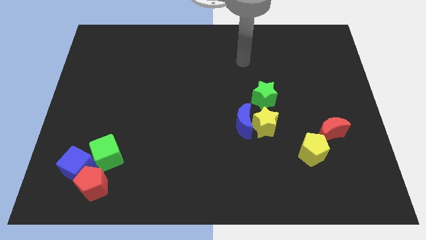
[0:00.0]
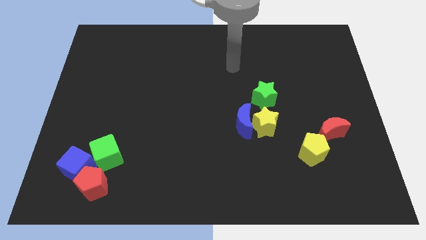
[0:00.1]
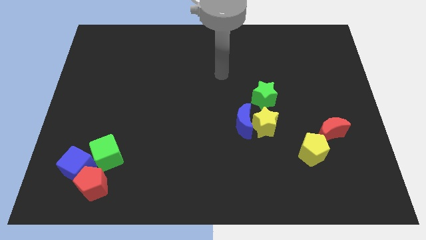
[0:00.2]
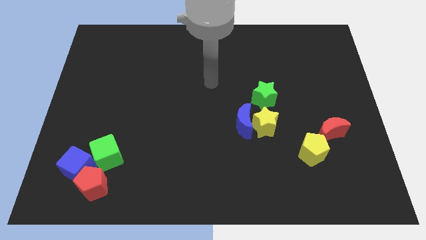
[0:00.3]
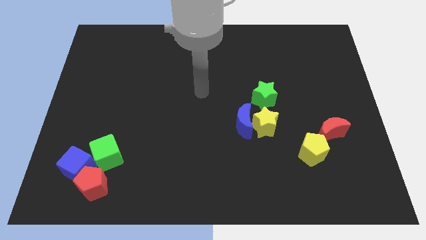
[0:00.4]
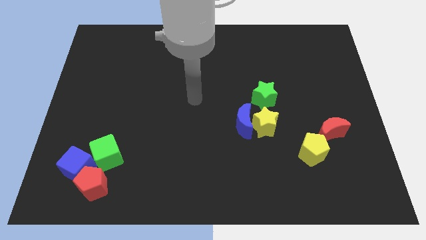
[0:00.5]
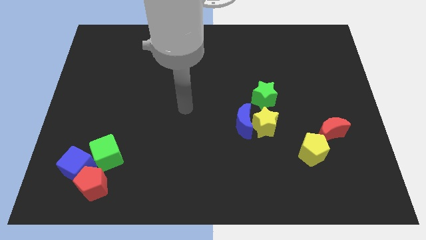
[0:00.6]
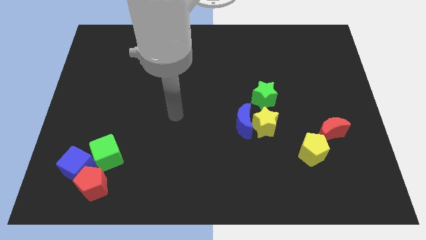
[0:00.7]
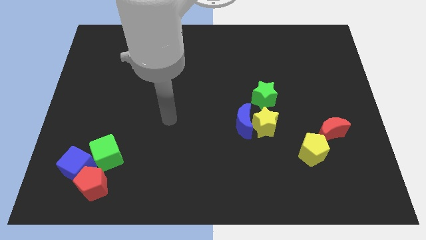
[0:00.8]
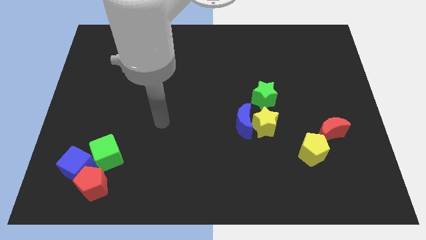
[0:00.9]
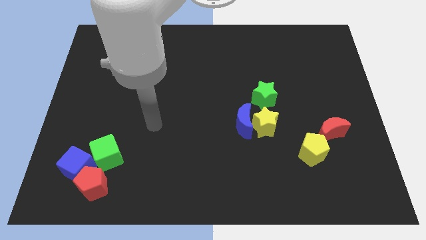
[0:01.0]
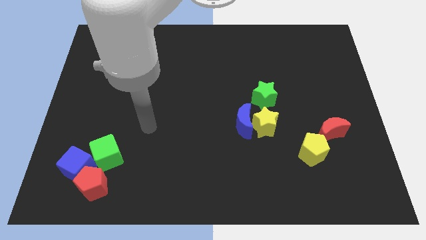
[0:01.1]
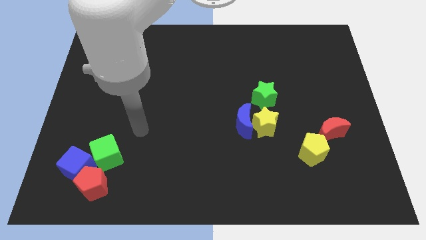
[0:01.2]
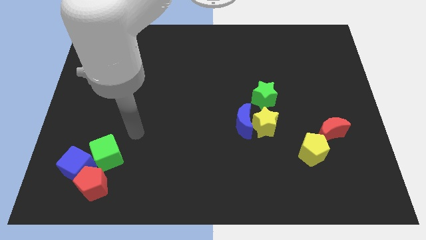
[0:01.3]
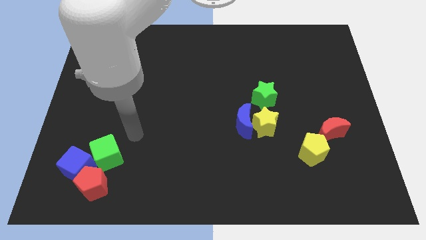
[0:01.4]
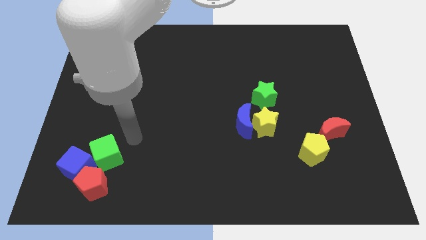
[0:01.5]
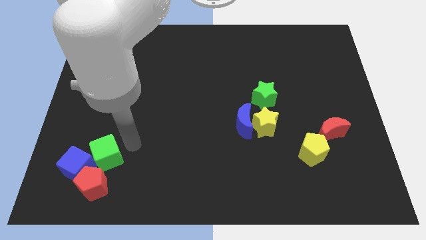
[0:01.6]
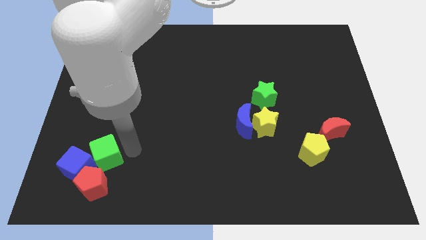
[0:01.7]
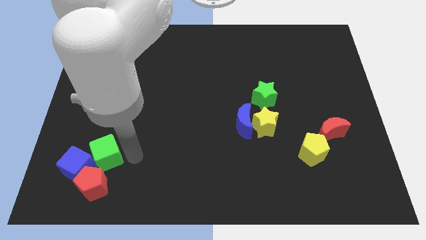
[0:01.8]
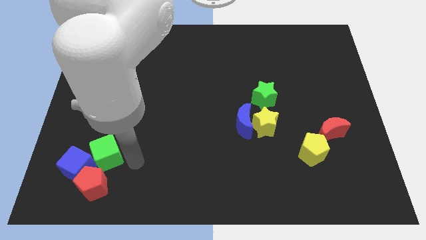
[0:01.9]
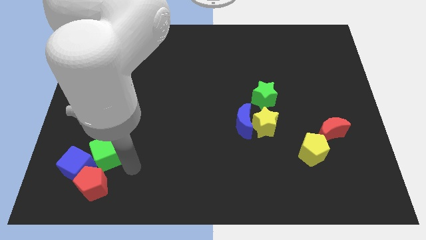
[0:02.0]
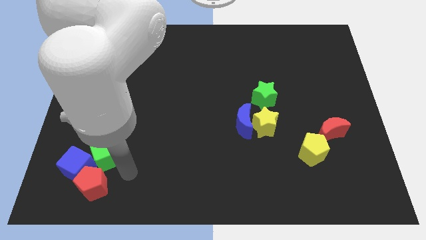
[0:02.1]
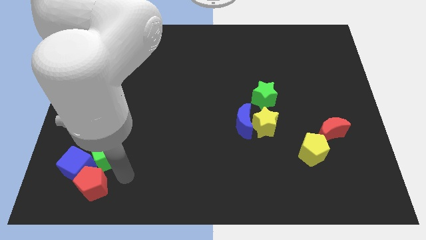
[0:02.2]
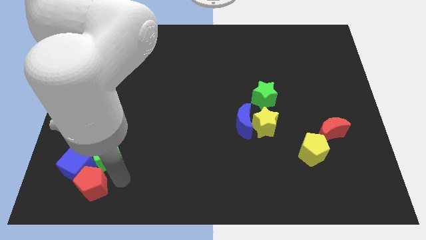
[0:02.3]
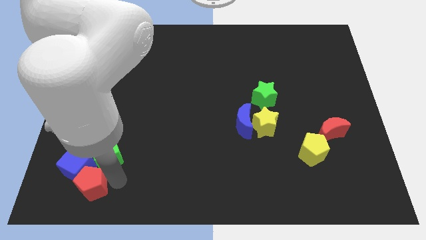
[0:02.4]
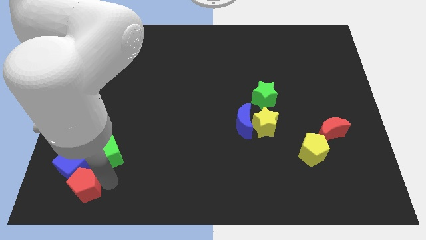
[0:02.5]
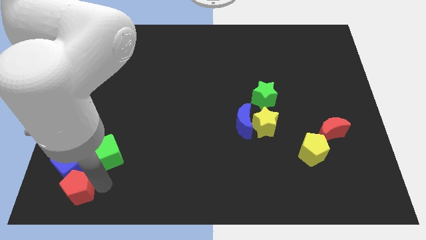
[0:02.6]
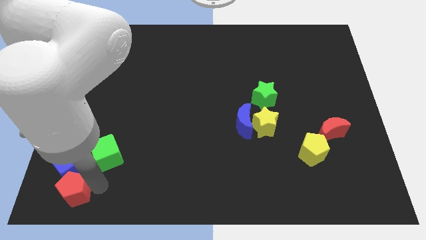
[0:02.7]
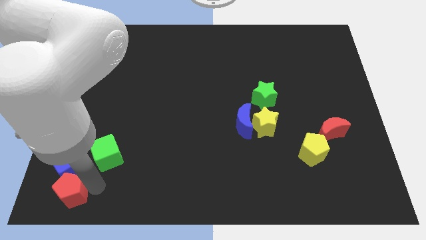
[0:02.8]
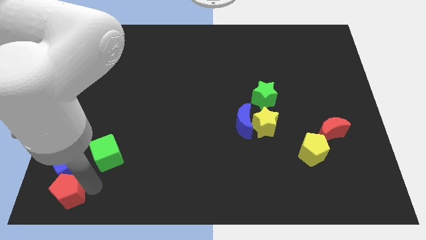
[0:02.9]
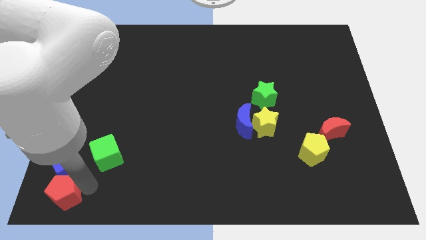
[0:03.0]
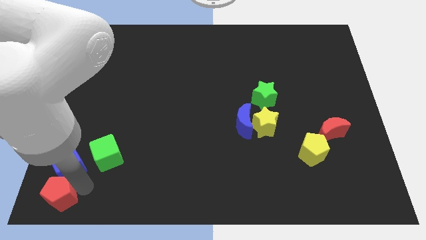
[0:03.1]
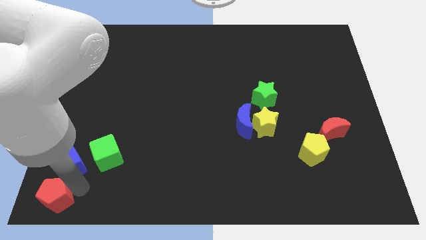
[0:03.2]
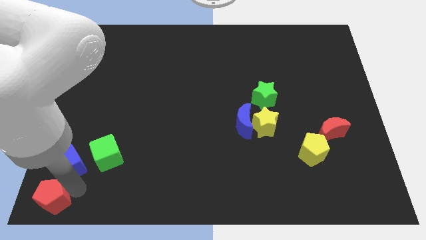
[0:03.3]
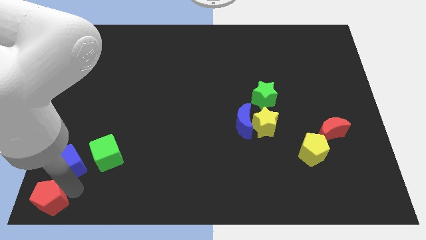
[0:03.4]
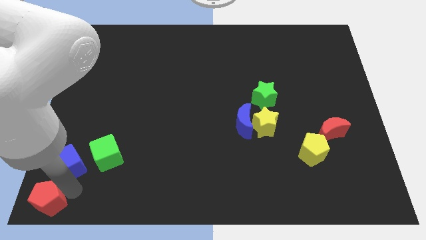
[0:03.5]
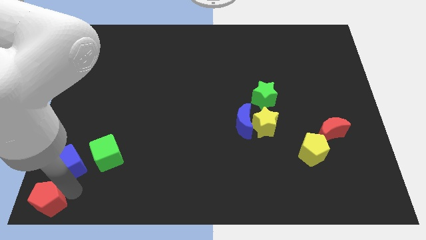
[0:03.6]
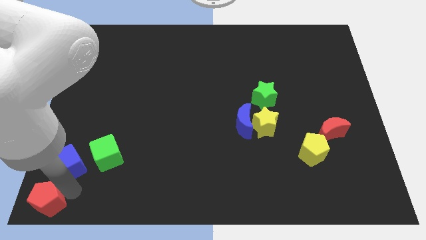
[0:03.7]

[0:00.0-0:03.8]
go and push the red pentagon to the bottom left corner

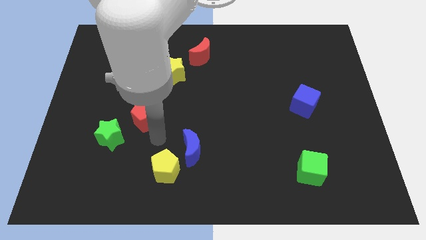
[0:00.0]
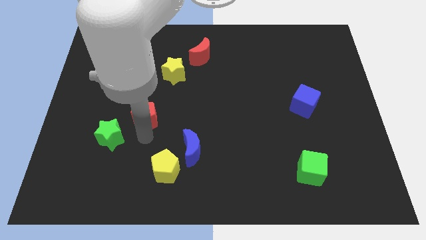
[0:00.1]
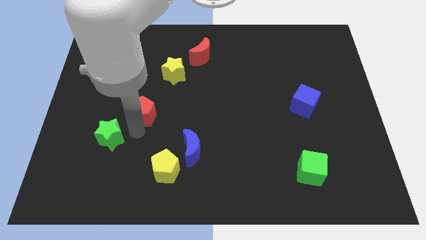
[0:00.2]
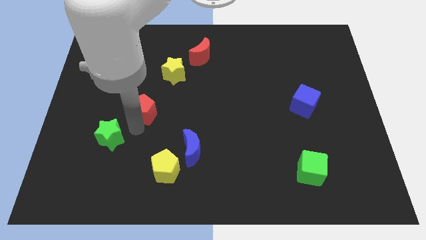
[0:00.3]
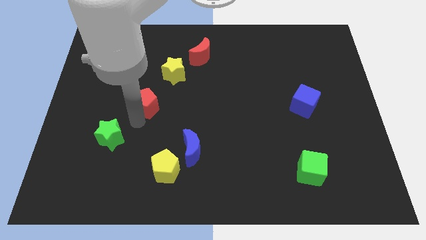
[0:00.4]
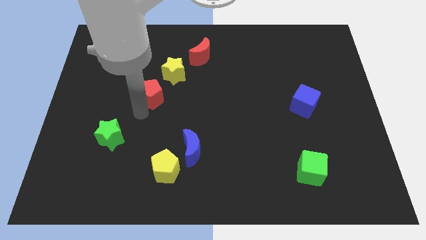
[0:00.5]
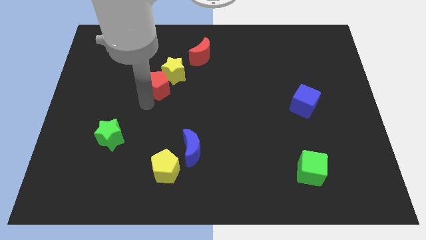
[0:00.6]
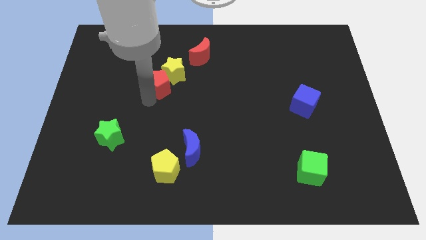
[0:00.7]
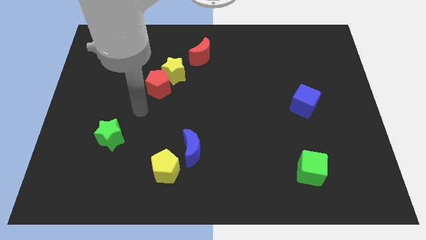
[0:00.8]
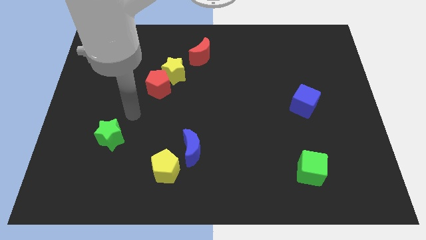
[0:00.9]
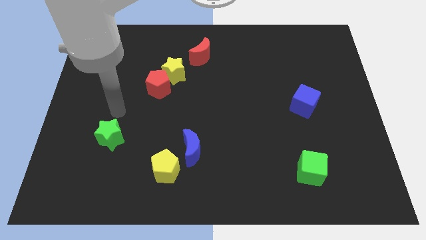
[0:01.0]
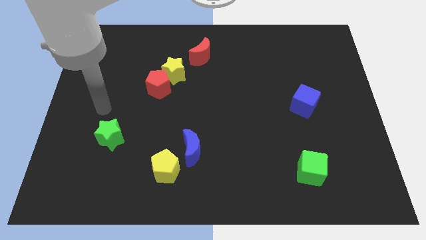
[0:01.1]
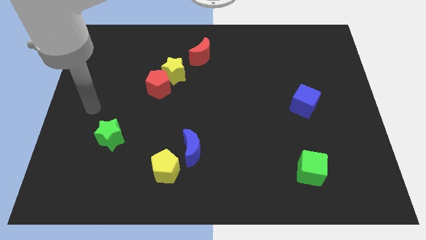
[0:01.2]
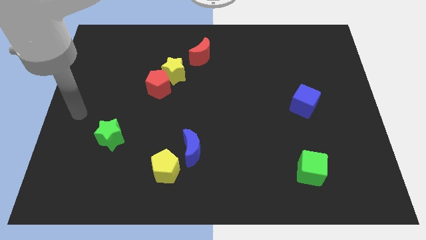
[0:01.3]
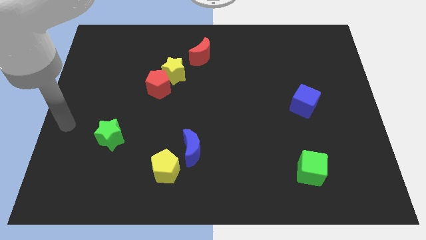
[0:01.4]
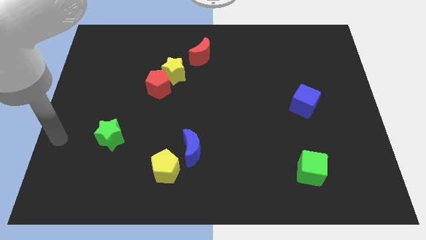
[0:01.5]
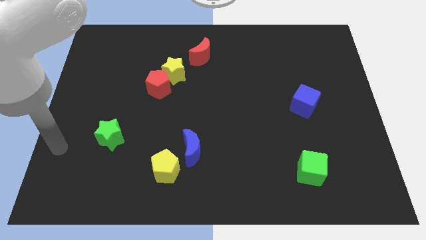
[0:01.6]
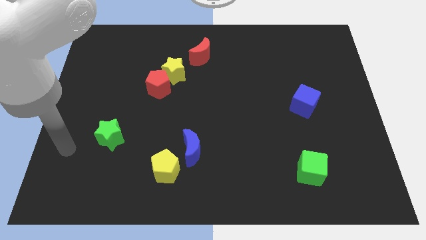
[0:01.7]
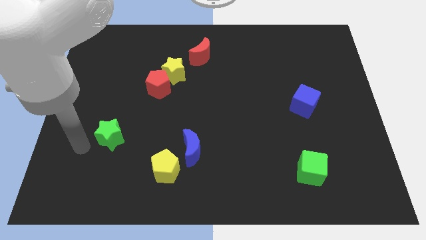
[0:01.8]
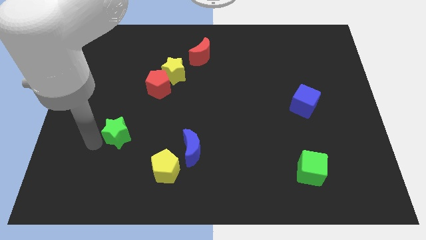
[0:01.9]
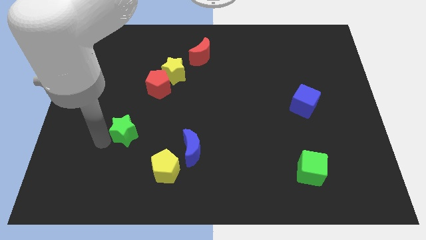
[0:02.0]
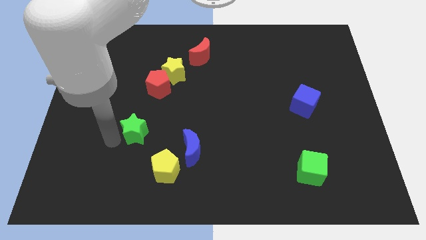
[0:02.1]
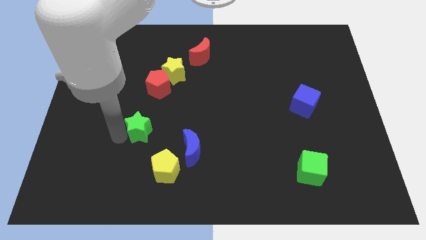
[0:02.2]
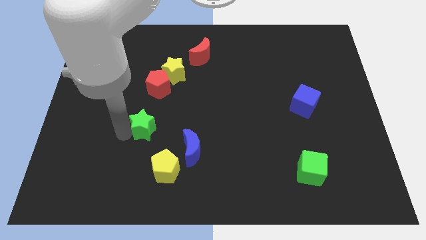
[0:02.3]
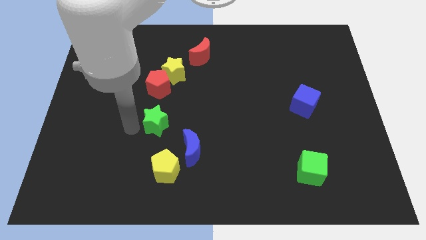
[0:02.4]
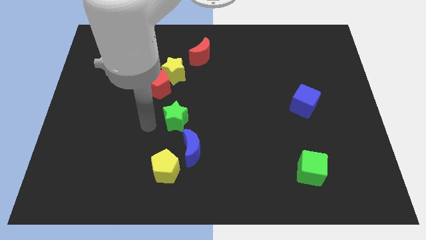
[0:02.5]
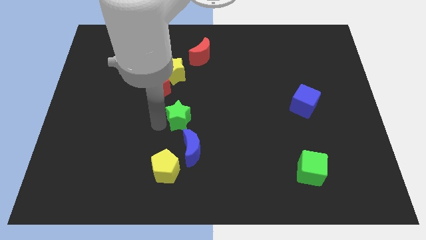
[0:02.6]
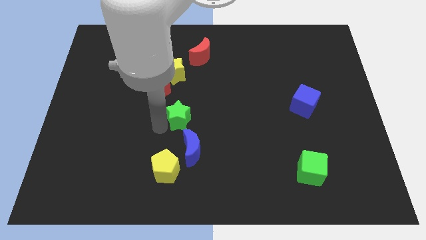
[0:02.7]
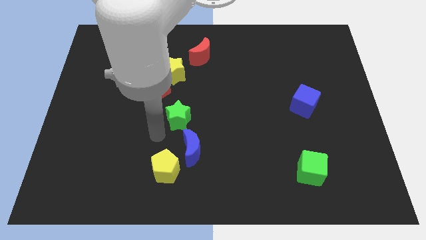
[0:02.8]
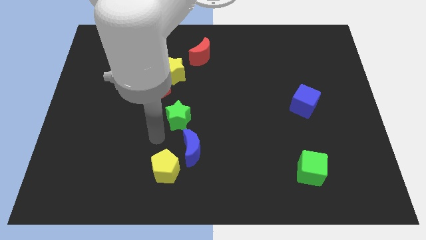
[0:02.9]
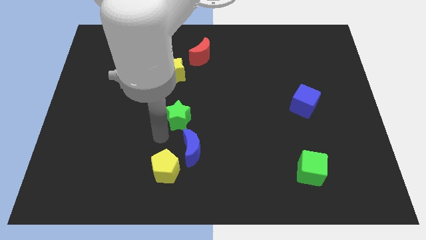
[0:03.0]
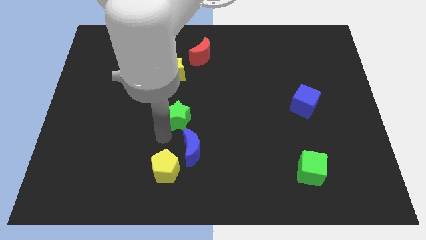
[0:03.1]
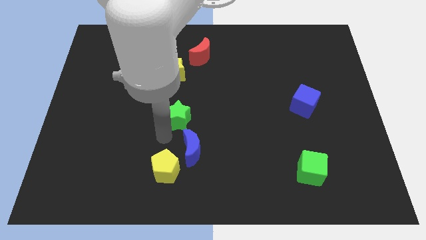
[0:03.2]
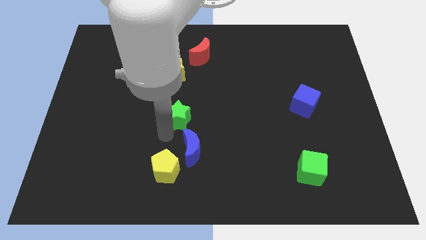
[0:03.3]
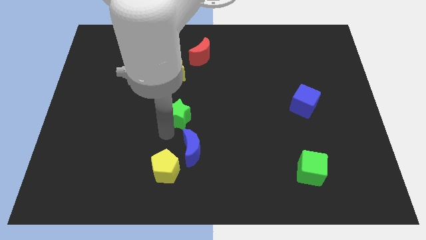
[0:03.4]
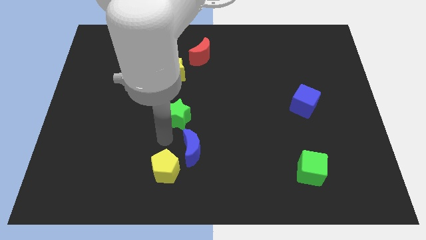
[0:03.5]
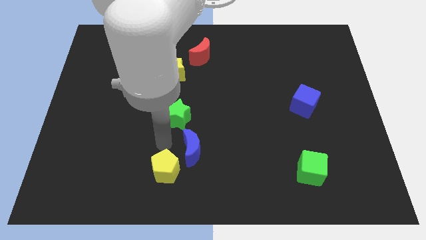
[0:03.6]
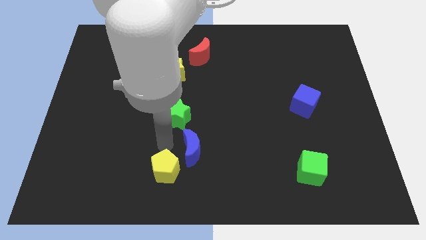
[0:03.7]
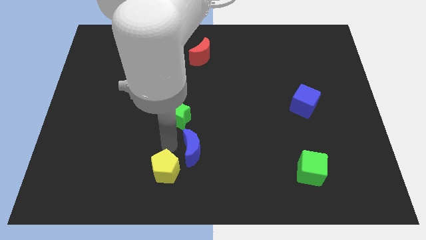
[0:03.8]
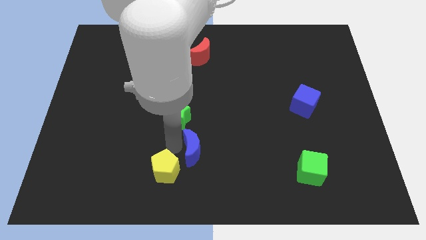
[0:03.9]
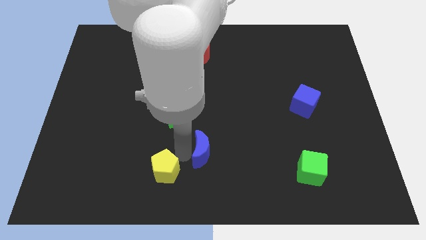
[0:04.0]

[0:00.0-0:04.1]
move the green star and red pentagon towards the top of the board

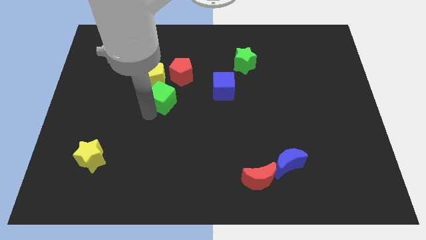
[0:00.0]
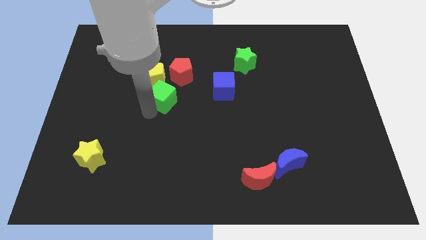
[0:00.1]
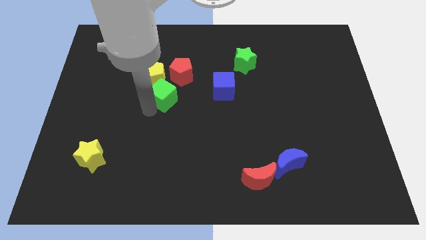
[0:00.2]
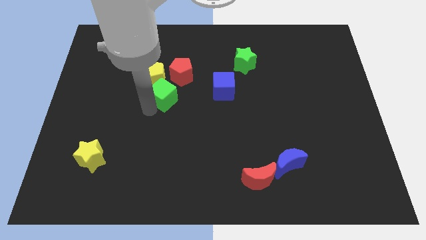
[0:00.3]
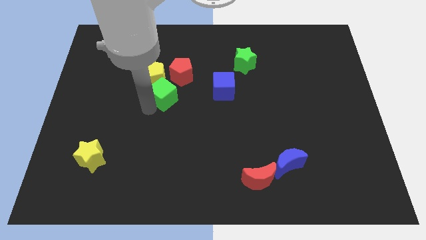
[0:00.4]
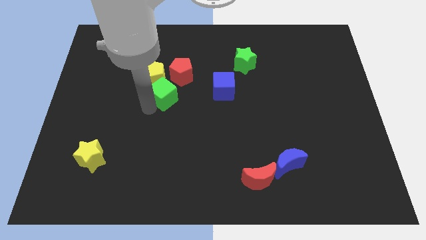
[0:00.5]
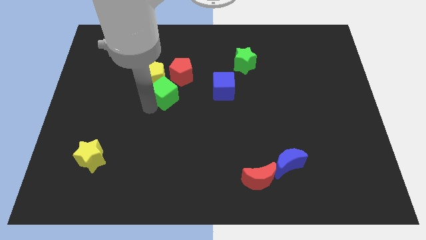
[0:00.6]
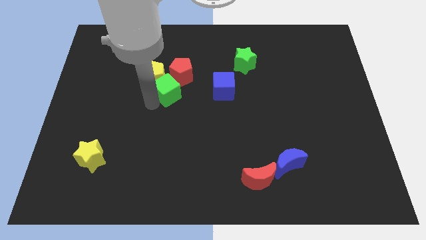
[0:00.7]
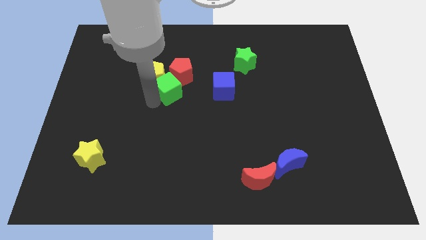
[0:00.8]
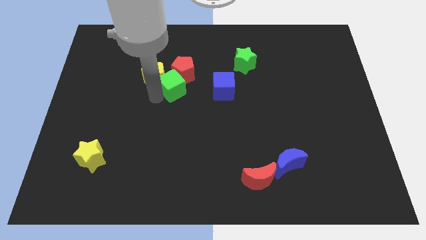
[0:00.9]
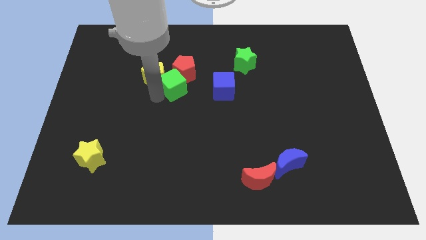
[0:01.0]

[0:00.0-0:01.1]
push the green cube into the red pentagon
